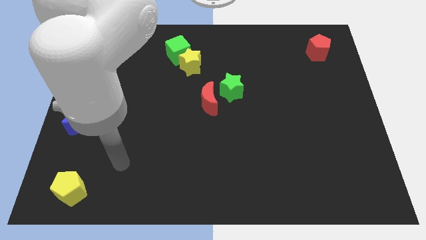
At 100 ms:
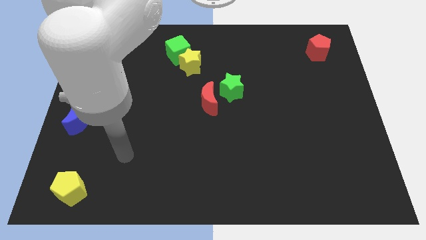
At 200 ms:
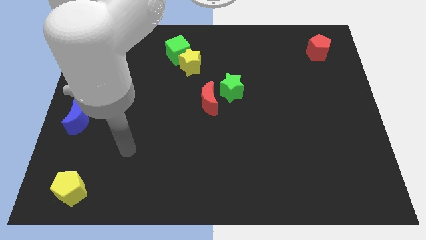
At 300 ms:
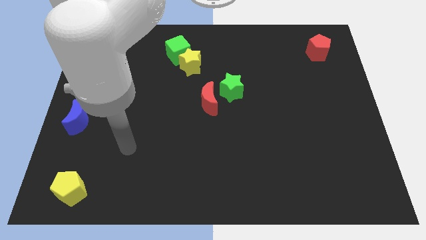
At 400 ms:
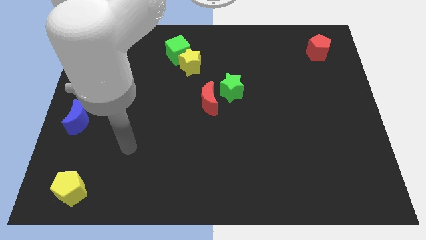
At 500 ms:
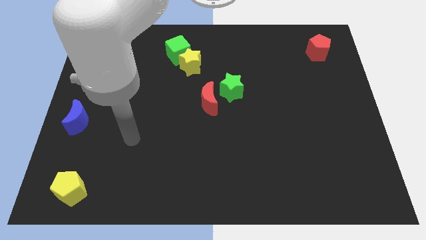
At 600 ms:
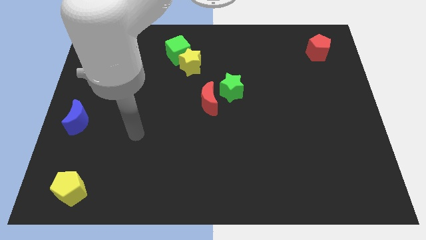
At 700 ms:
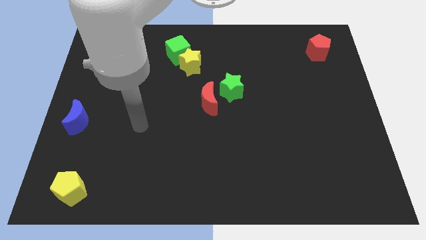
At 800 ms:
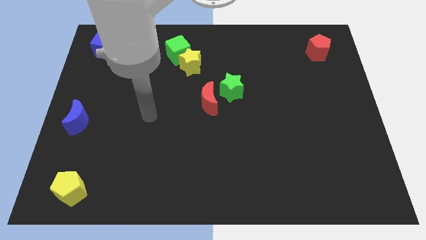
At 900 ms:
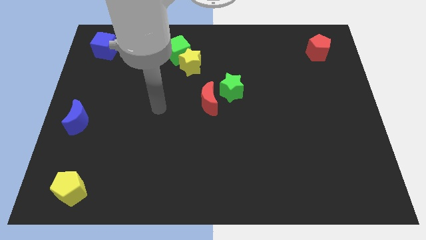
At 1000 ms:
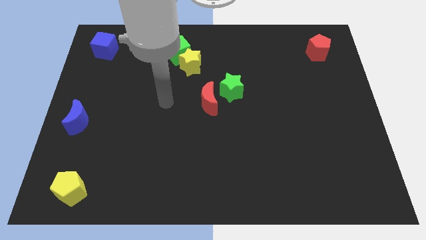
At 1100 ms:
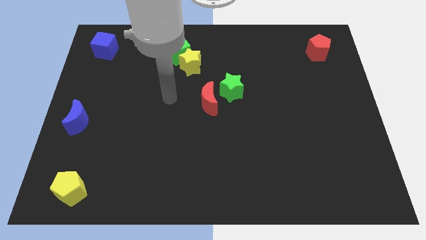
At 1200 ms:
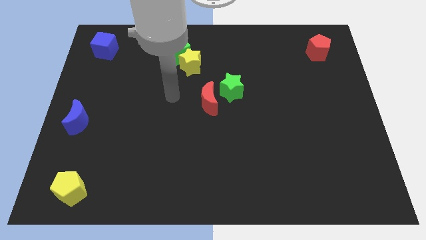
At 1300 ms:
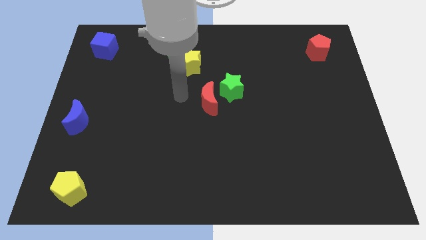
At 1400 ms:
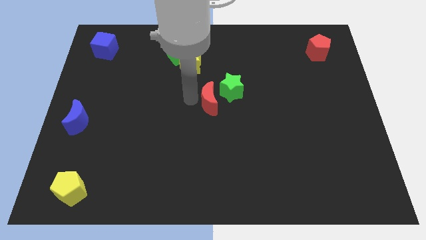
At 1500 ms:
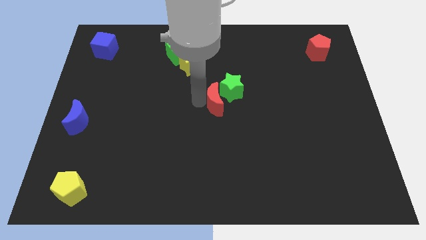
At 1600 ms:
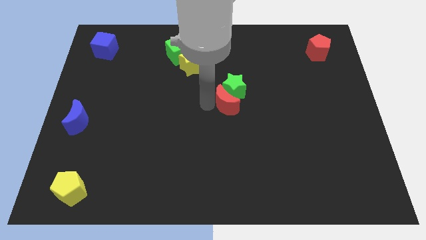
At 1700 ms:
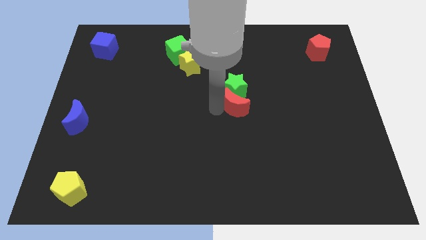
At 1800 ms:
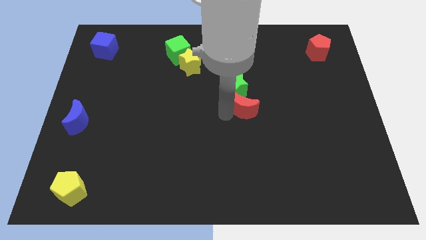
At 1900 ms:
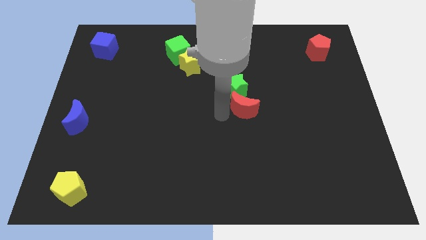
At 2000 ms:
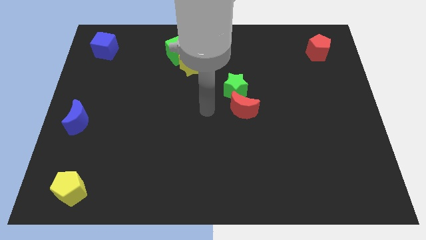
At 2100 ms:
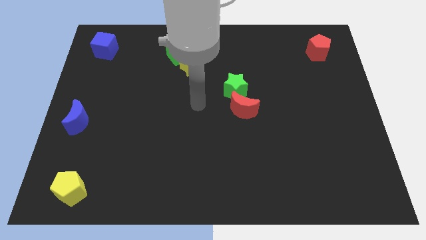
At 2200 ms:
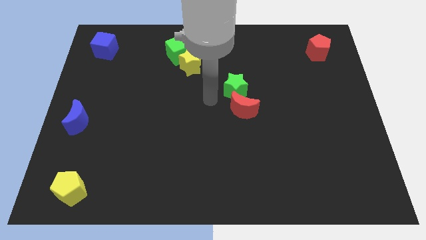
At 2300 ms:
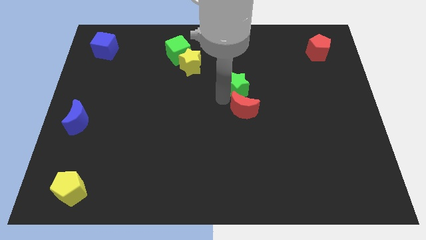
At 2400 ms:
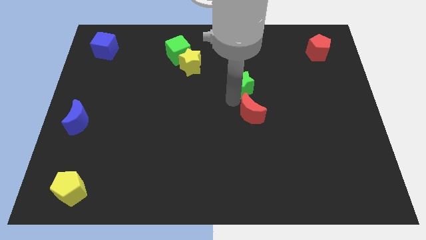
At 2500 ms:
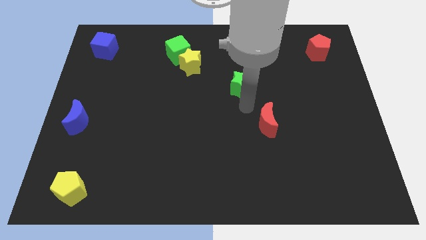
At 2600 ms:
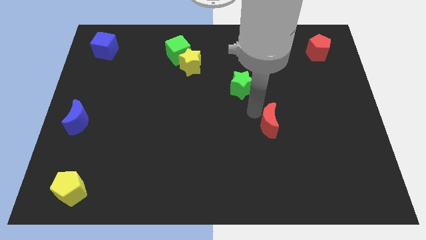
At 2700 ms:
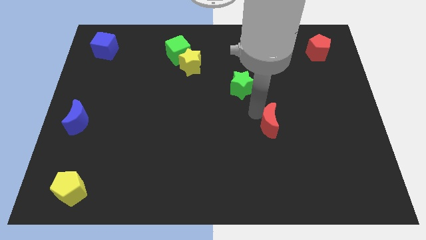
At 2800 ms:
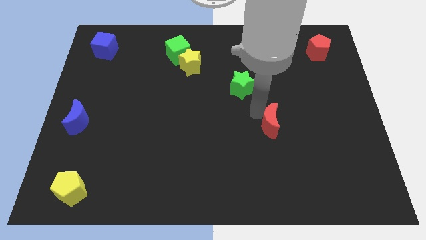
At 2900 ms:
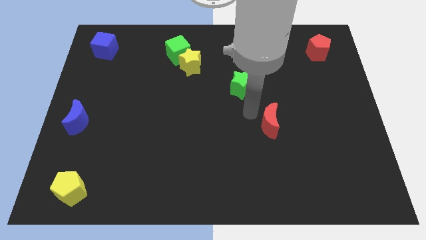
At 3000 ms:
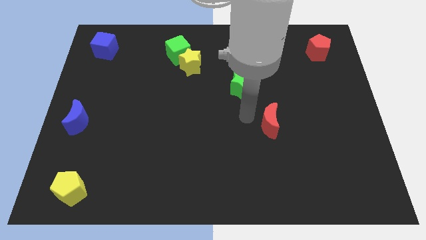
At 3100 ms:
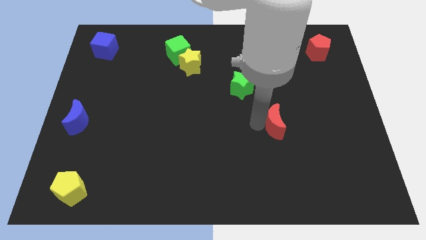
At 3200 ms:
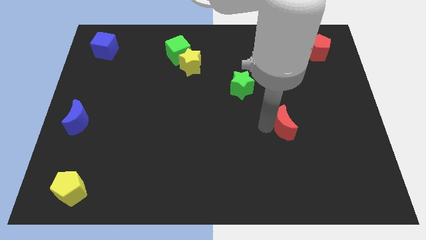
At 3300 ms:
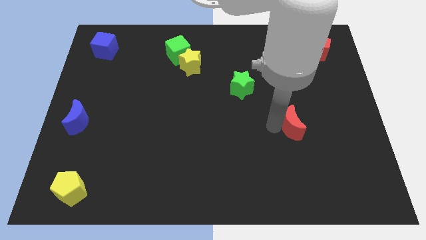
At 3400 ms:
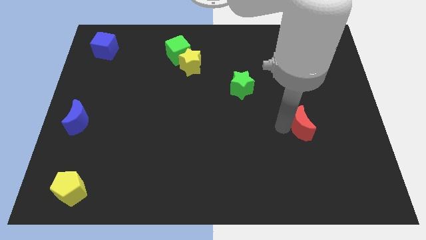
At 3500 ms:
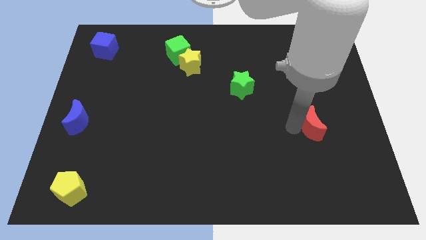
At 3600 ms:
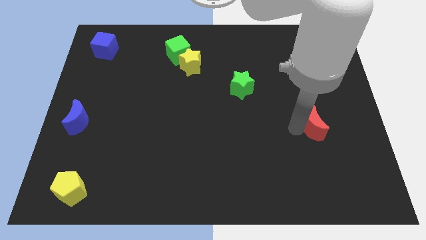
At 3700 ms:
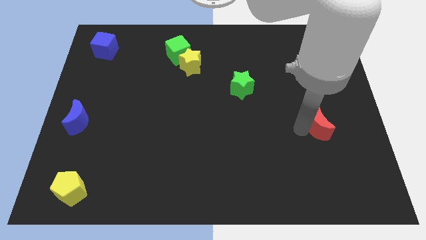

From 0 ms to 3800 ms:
move the red crescent to the bottom of the red pentagon

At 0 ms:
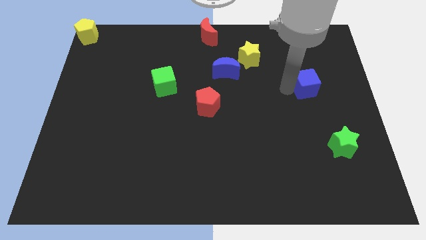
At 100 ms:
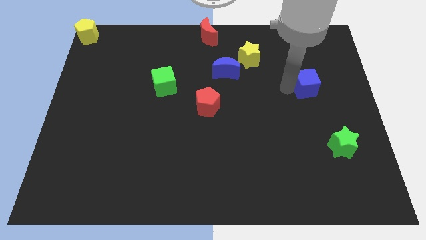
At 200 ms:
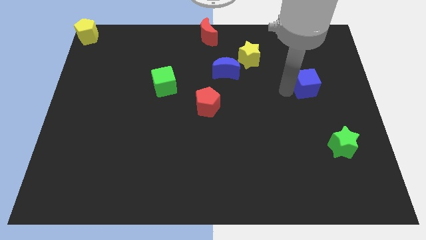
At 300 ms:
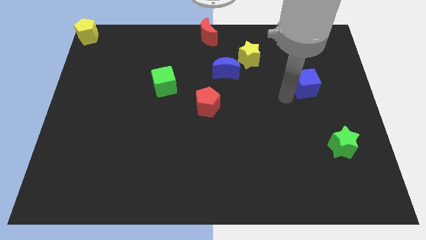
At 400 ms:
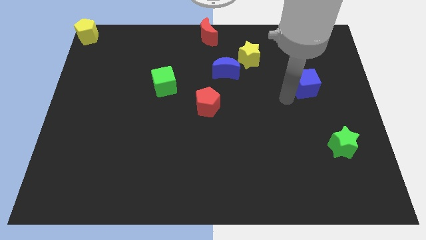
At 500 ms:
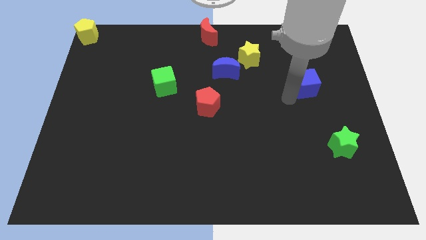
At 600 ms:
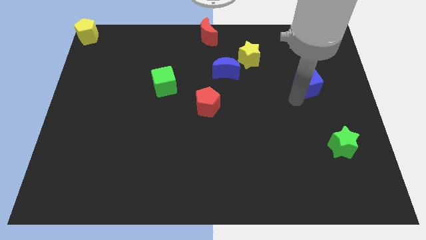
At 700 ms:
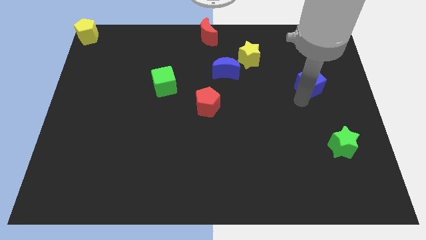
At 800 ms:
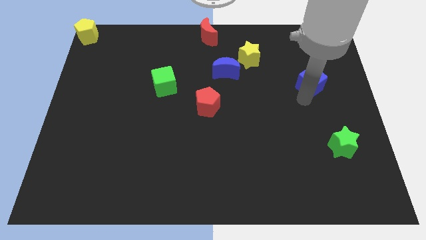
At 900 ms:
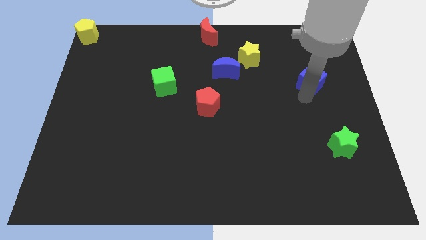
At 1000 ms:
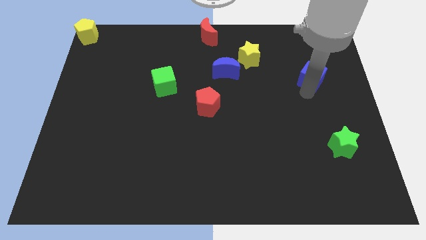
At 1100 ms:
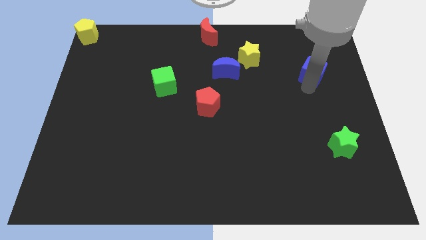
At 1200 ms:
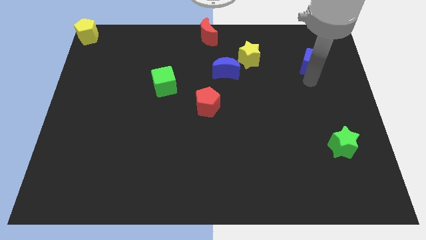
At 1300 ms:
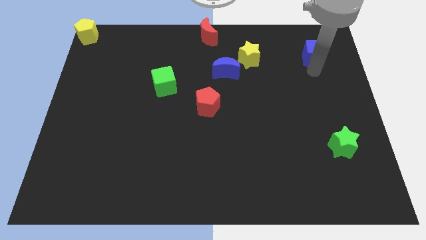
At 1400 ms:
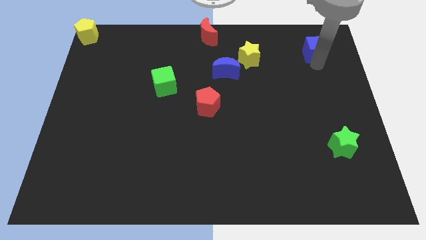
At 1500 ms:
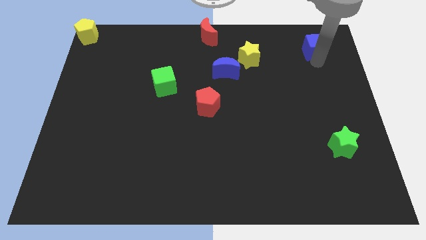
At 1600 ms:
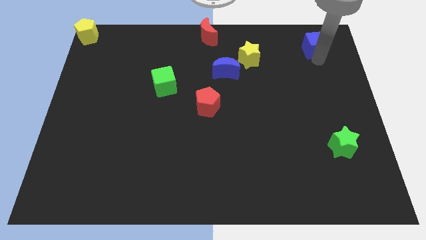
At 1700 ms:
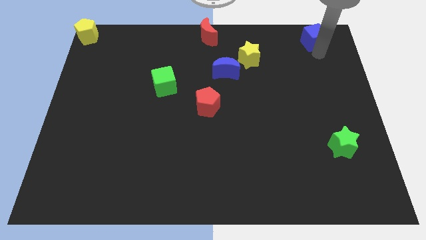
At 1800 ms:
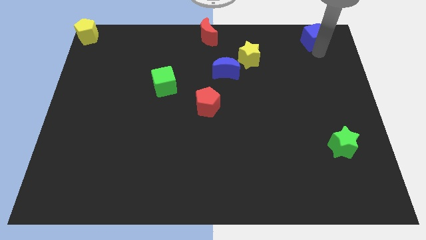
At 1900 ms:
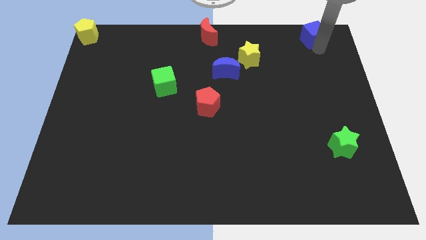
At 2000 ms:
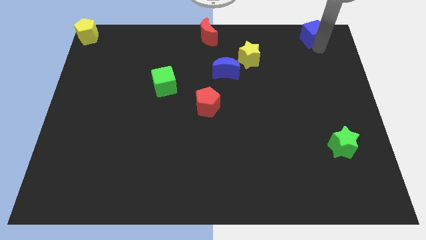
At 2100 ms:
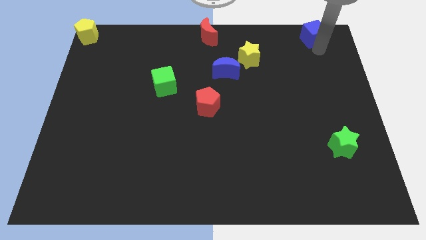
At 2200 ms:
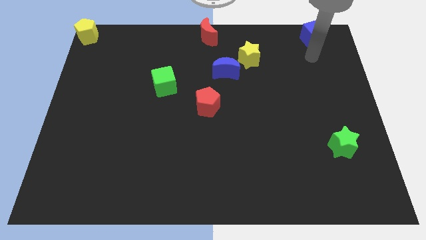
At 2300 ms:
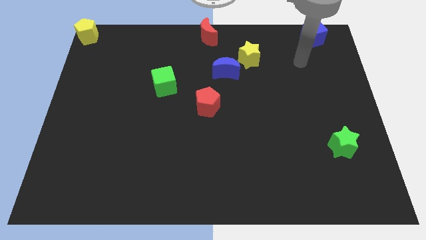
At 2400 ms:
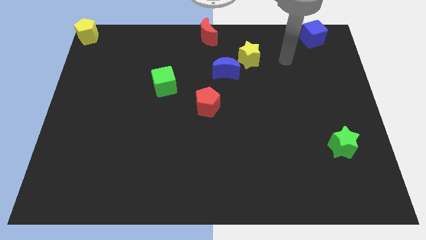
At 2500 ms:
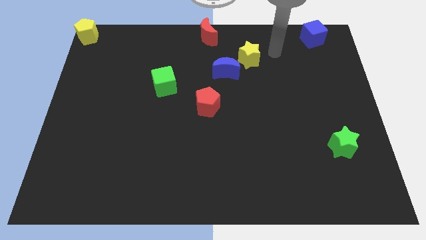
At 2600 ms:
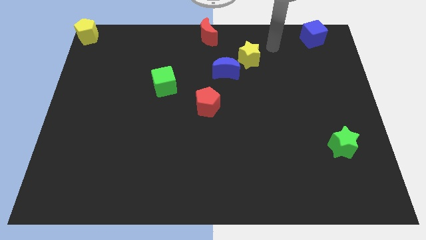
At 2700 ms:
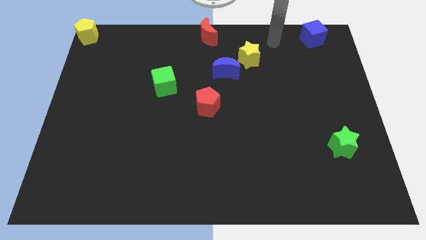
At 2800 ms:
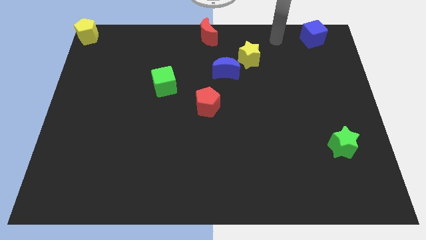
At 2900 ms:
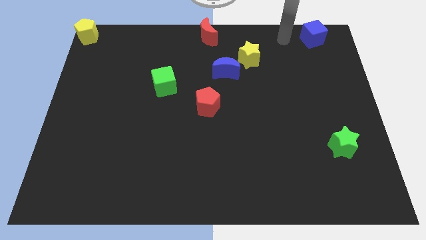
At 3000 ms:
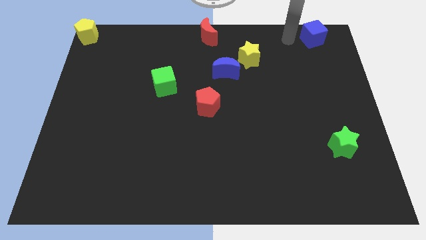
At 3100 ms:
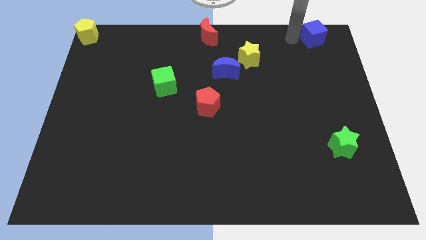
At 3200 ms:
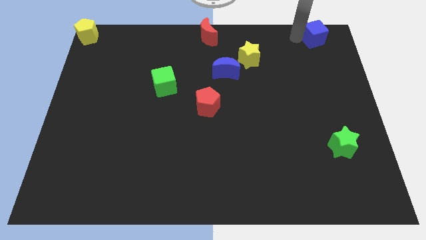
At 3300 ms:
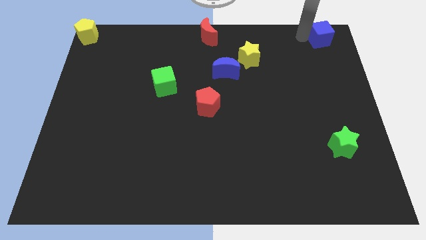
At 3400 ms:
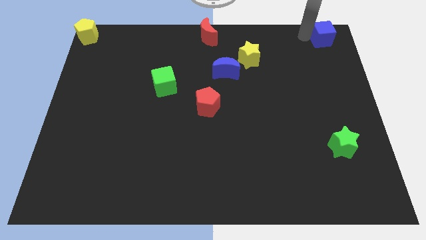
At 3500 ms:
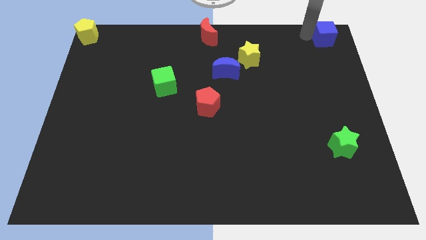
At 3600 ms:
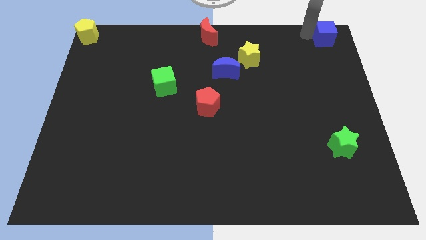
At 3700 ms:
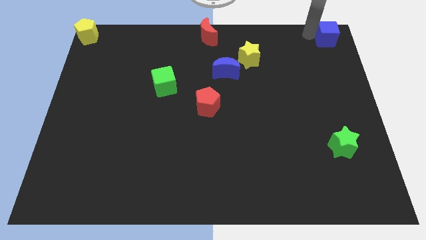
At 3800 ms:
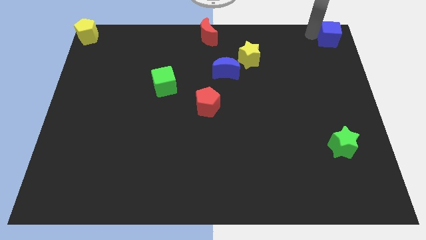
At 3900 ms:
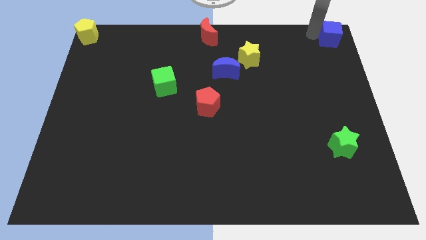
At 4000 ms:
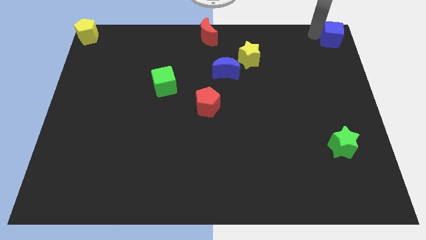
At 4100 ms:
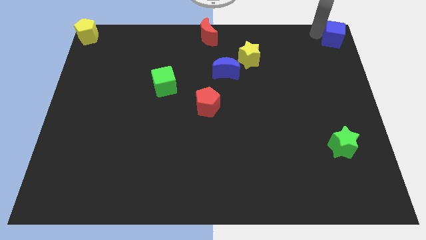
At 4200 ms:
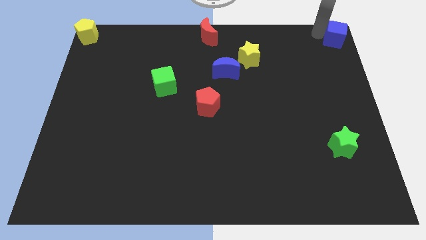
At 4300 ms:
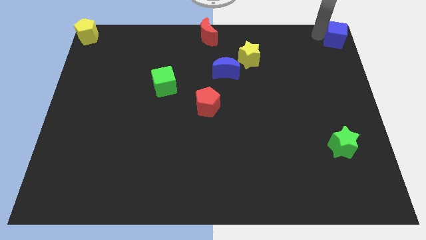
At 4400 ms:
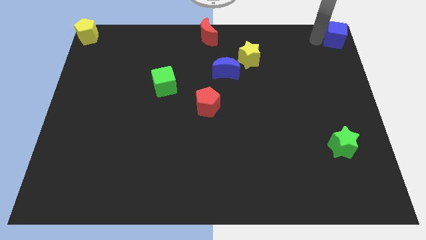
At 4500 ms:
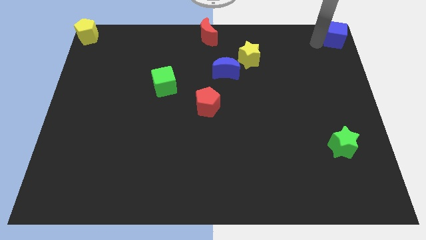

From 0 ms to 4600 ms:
place the blue cube at top right corner of the board

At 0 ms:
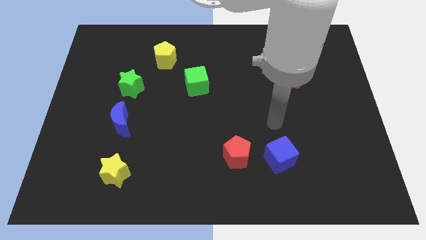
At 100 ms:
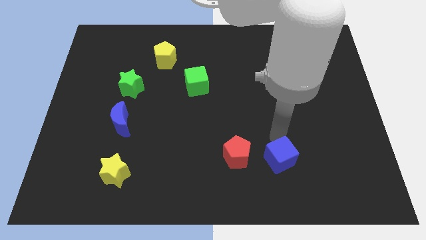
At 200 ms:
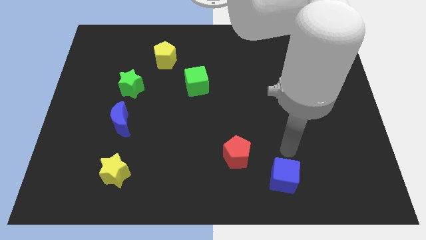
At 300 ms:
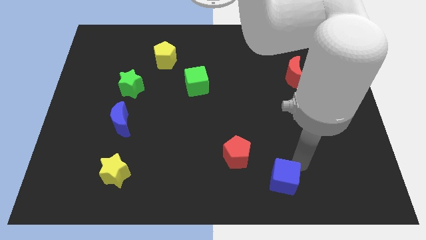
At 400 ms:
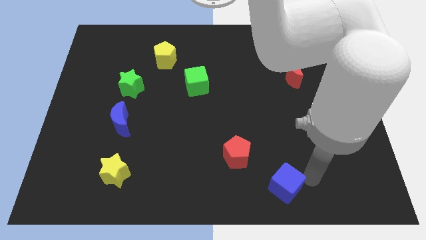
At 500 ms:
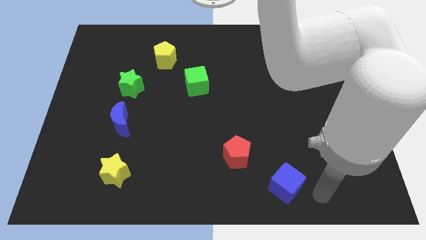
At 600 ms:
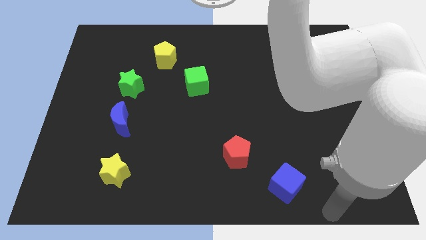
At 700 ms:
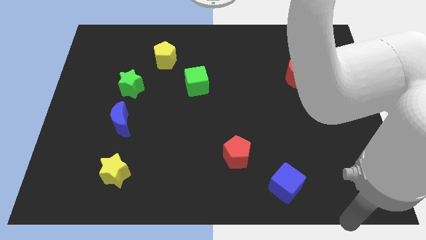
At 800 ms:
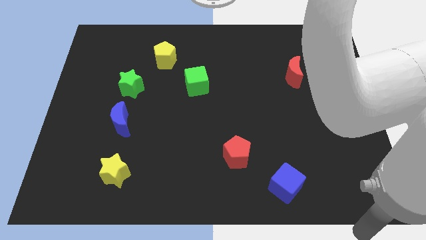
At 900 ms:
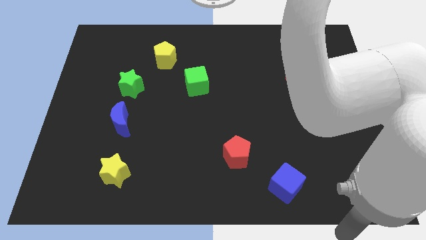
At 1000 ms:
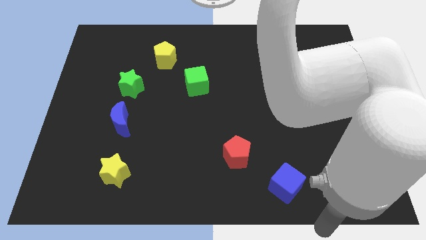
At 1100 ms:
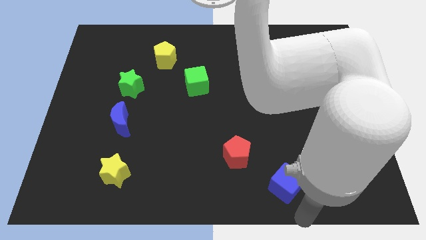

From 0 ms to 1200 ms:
push blue cube downwards
